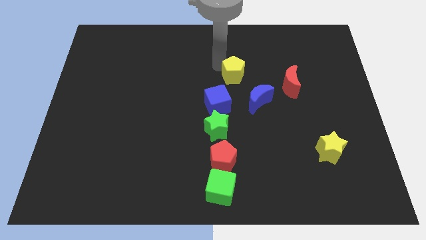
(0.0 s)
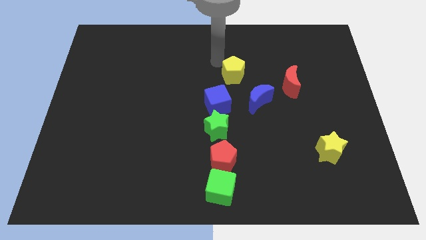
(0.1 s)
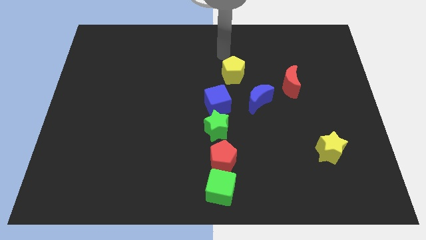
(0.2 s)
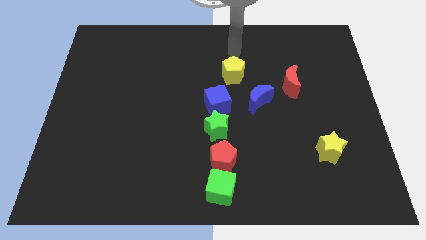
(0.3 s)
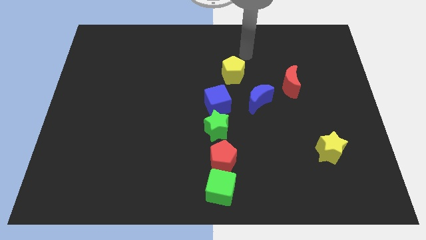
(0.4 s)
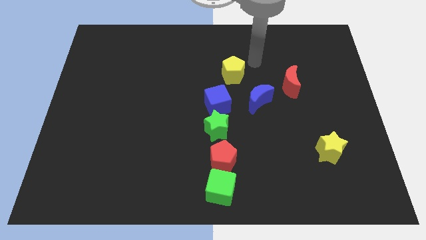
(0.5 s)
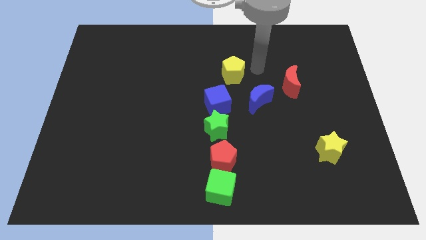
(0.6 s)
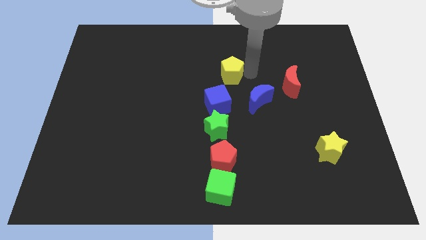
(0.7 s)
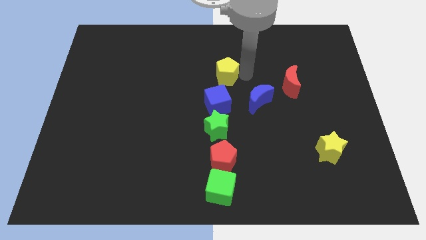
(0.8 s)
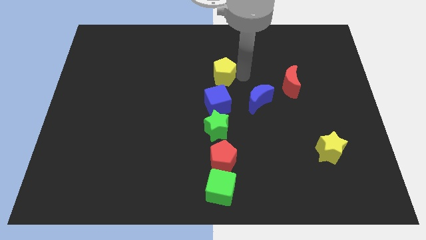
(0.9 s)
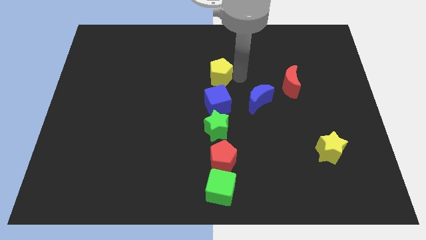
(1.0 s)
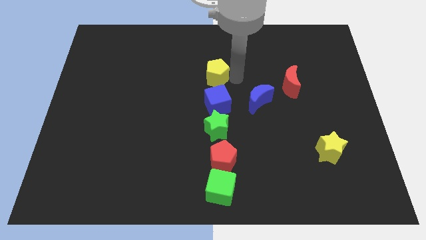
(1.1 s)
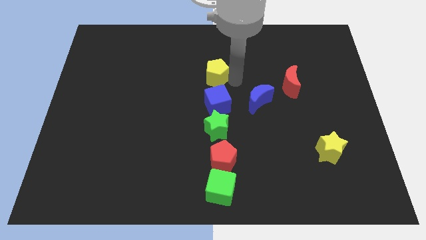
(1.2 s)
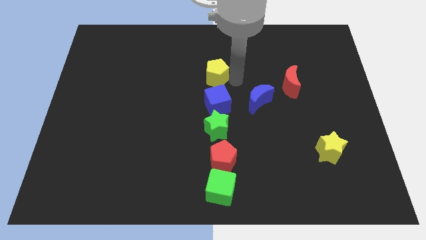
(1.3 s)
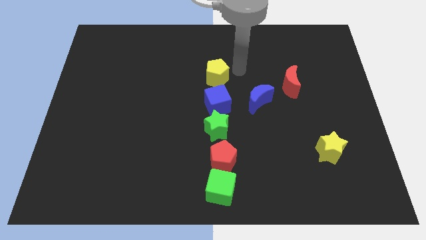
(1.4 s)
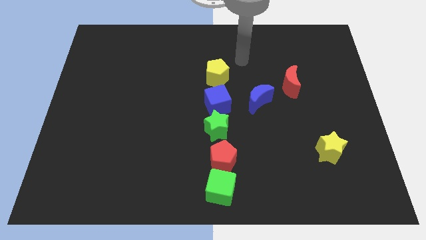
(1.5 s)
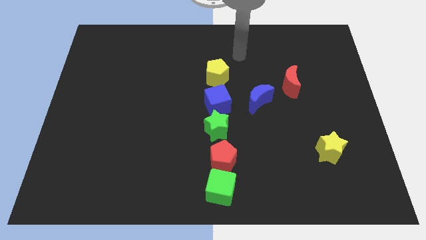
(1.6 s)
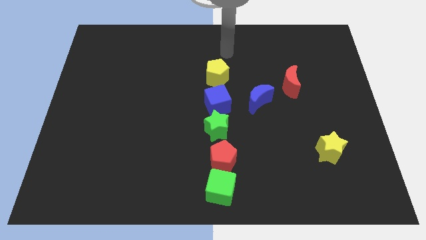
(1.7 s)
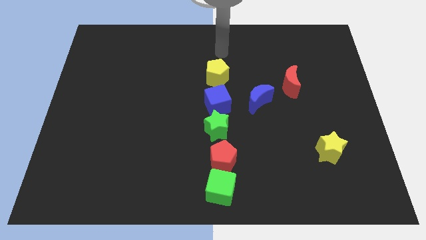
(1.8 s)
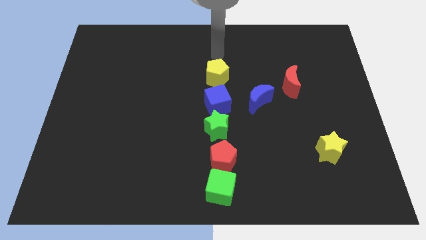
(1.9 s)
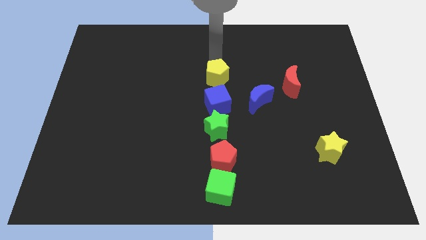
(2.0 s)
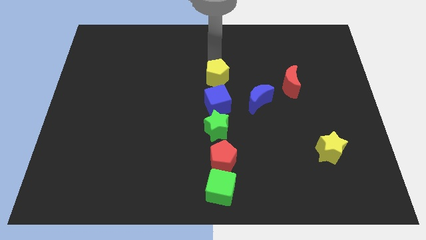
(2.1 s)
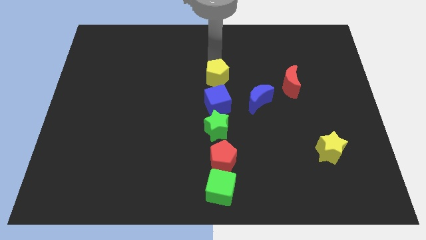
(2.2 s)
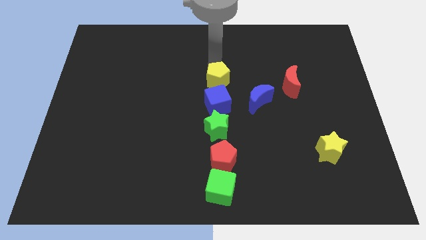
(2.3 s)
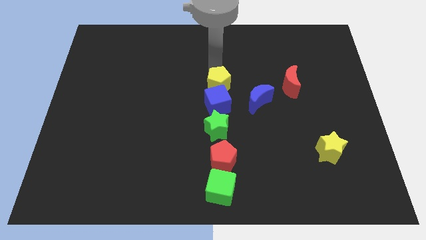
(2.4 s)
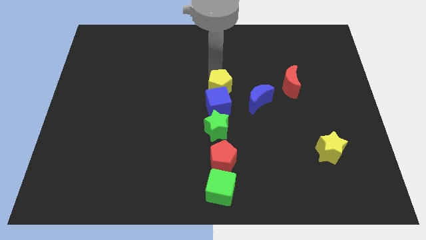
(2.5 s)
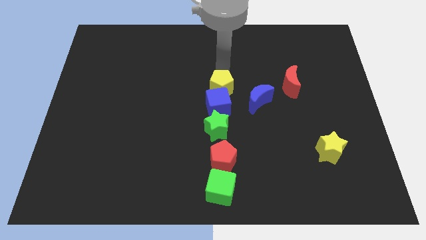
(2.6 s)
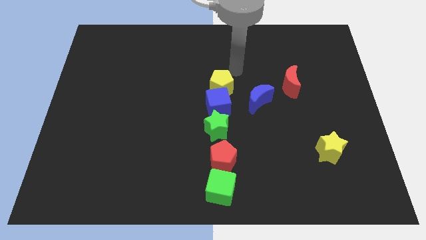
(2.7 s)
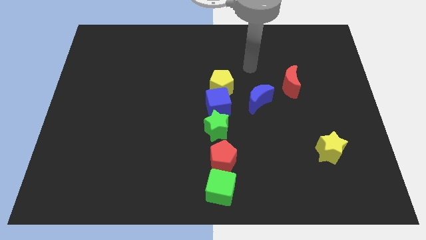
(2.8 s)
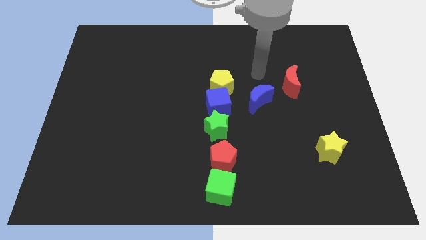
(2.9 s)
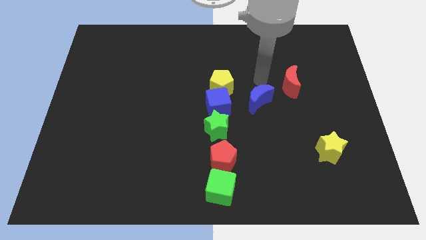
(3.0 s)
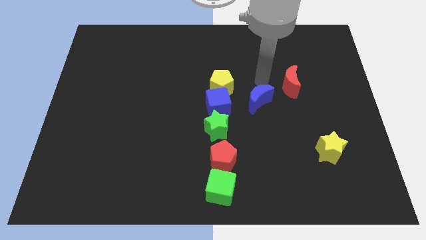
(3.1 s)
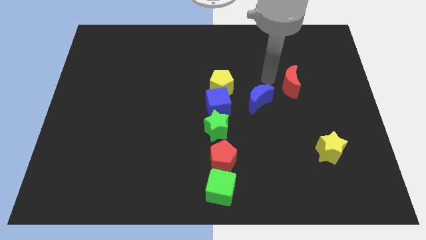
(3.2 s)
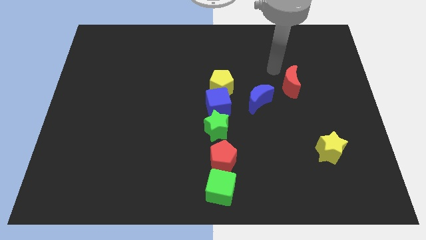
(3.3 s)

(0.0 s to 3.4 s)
push yellow pentagon into the blue cube move red moon slightly towards center

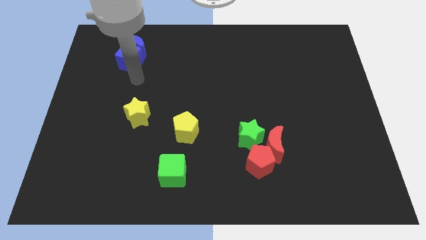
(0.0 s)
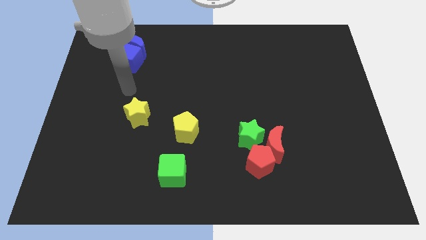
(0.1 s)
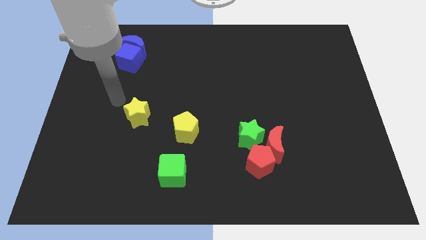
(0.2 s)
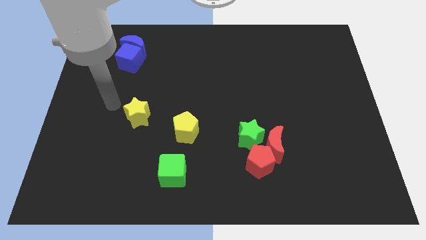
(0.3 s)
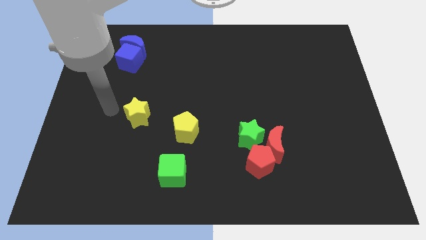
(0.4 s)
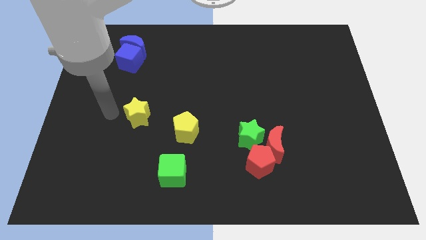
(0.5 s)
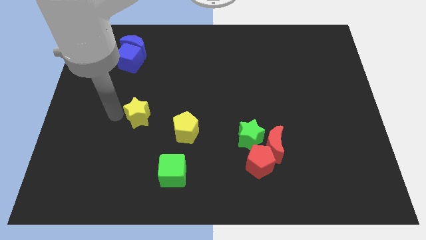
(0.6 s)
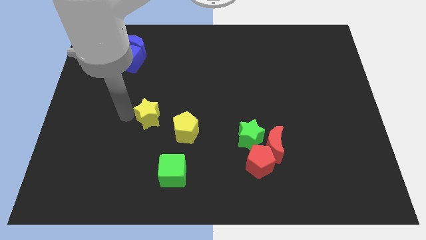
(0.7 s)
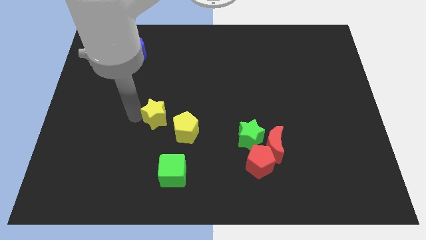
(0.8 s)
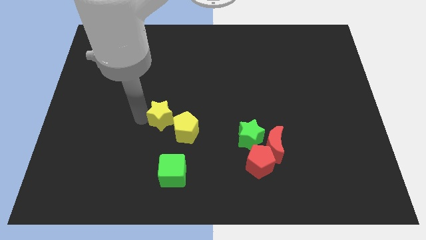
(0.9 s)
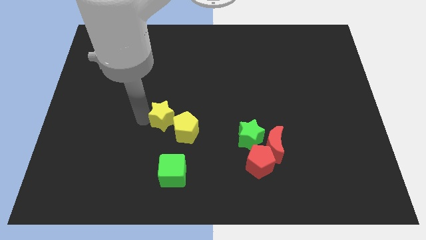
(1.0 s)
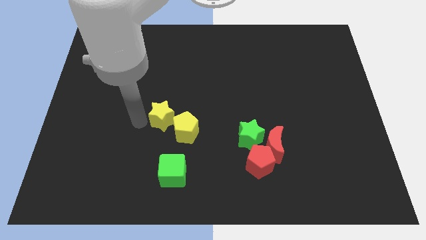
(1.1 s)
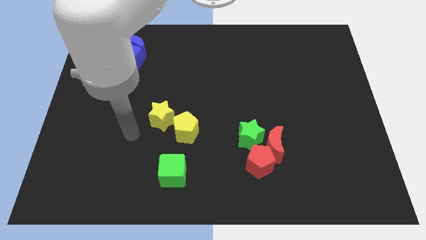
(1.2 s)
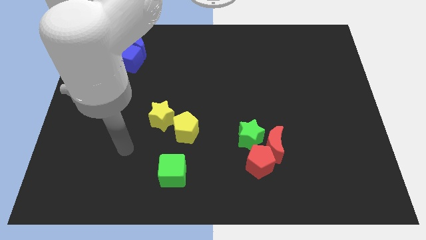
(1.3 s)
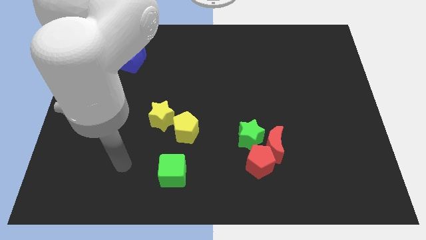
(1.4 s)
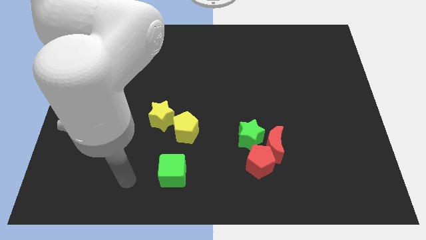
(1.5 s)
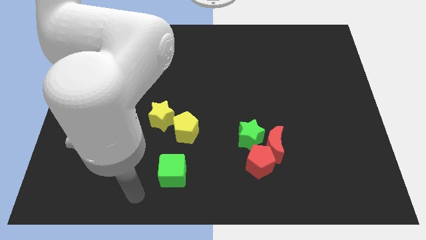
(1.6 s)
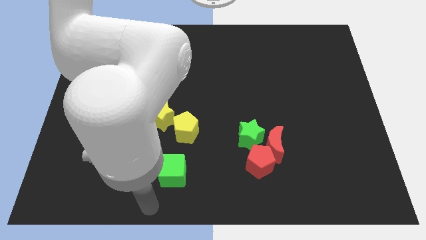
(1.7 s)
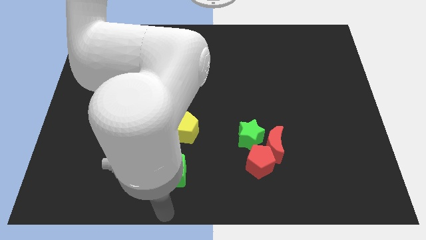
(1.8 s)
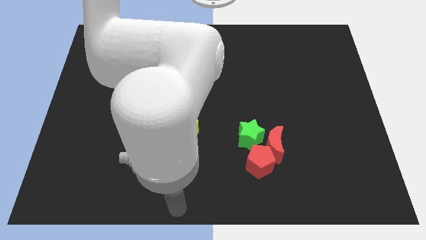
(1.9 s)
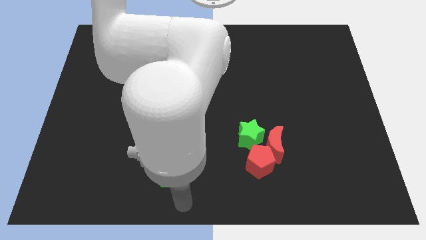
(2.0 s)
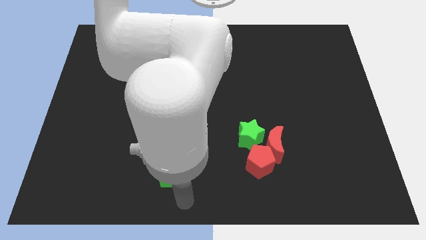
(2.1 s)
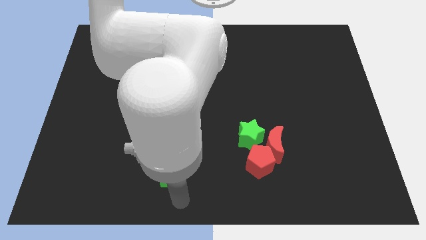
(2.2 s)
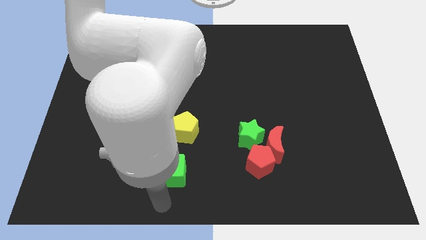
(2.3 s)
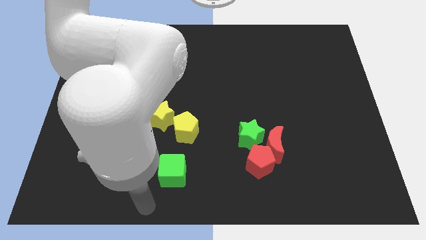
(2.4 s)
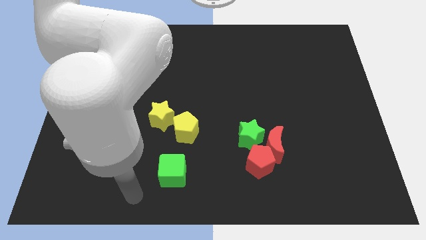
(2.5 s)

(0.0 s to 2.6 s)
push the yellow star close to the yellow pentagon

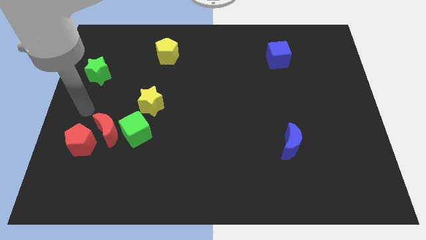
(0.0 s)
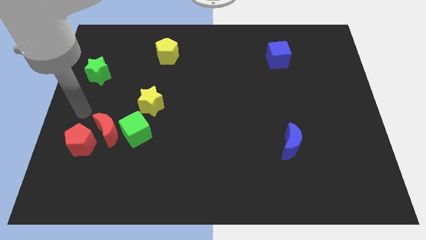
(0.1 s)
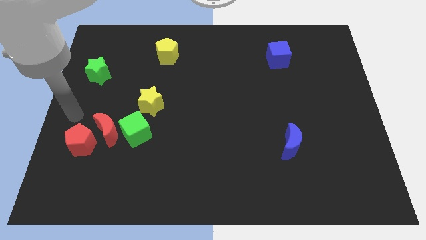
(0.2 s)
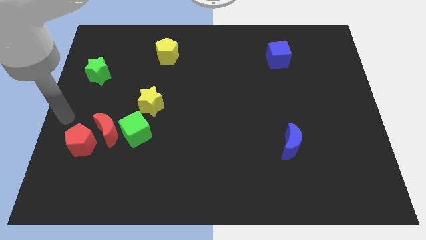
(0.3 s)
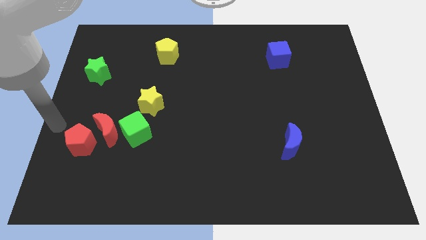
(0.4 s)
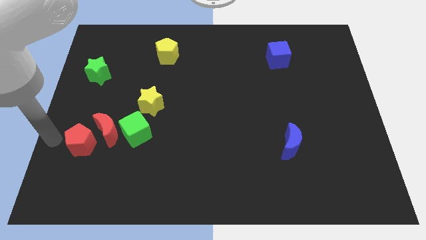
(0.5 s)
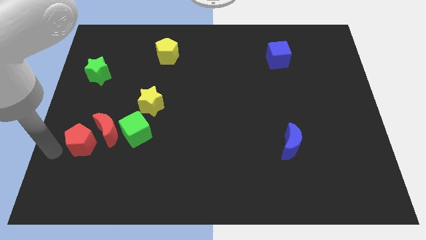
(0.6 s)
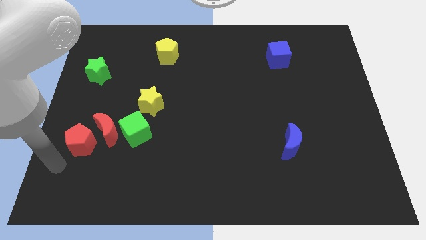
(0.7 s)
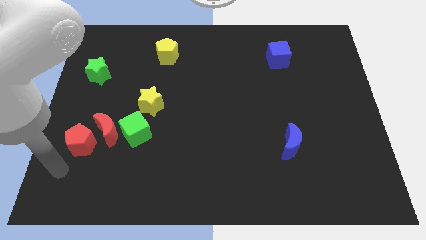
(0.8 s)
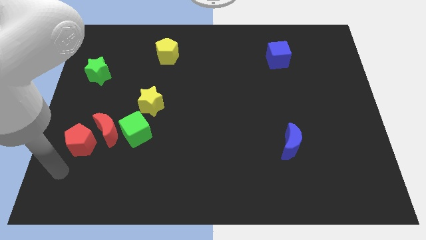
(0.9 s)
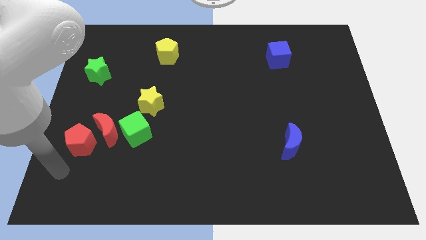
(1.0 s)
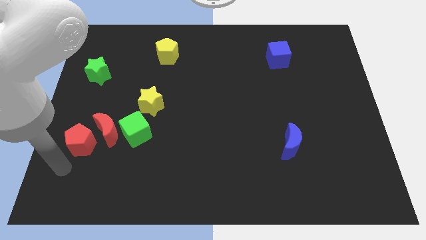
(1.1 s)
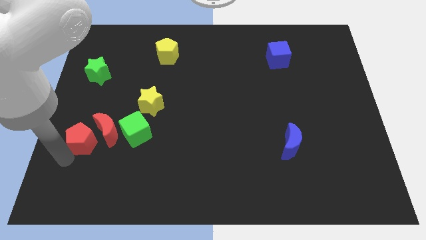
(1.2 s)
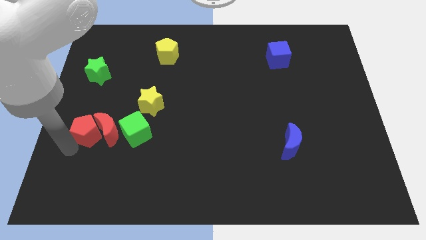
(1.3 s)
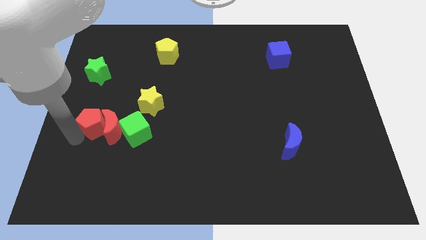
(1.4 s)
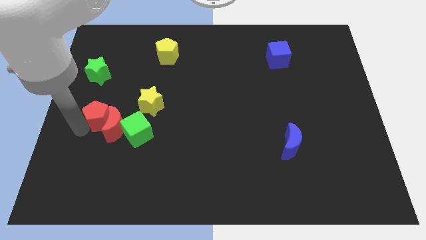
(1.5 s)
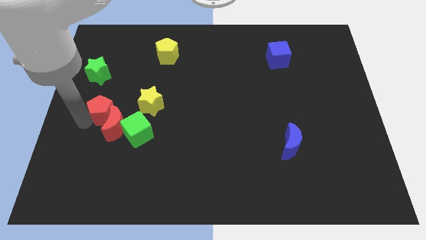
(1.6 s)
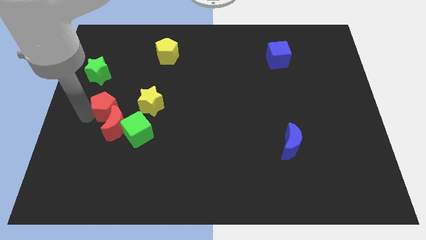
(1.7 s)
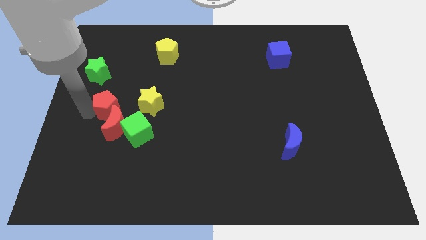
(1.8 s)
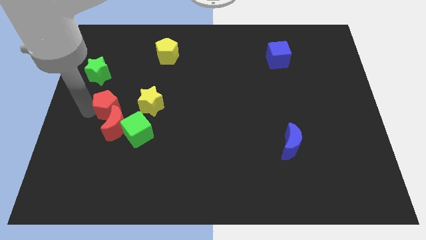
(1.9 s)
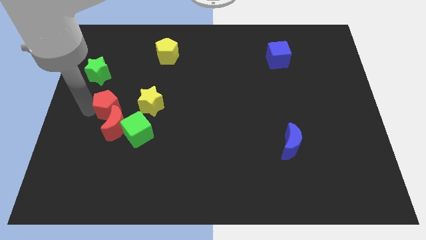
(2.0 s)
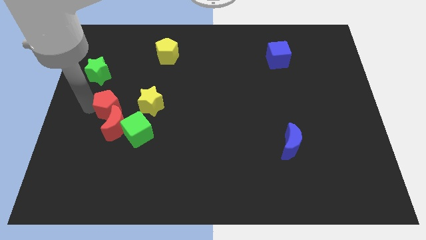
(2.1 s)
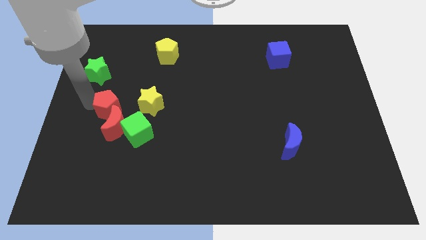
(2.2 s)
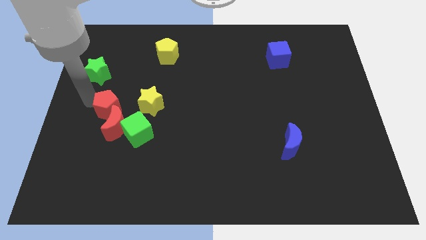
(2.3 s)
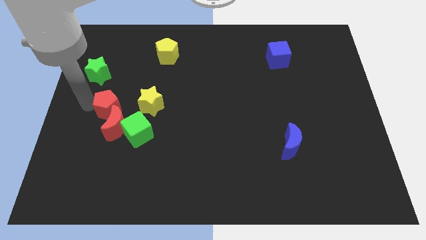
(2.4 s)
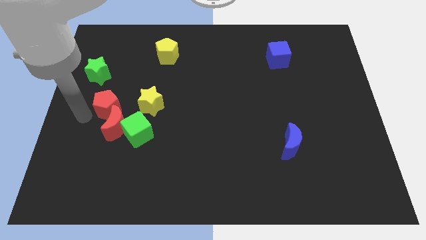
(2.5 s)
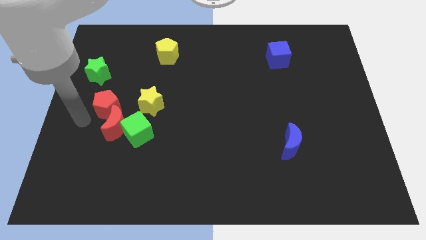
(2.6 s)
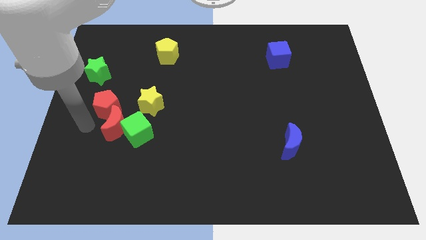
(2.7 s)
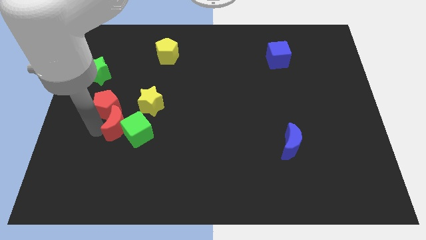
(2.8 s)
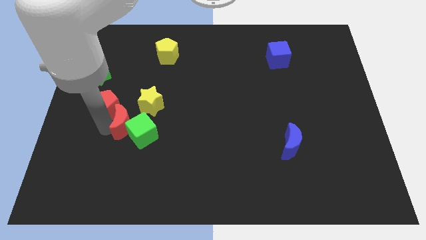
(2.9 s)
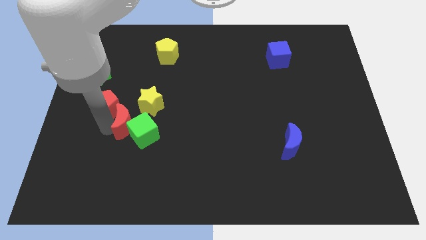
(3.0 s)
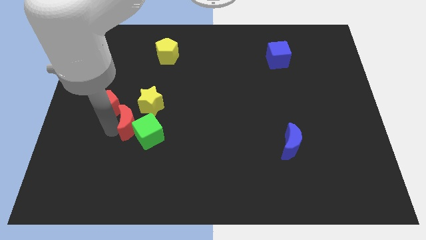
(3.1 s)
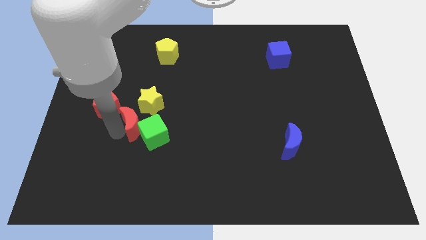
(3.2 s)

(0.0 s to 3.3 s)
push green star below yellow star with the help of red crescent
